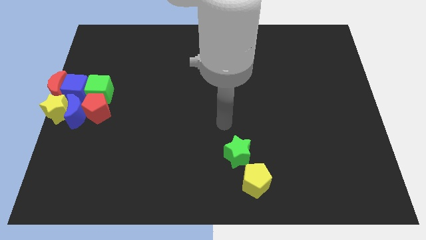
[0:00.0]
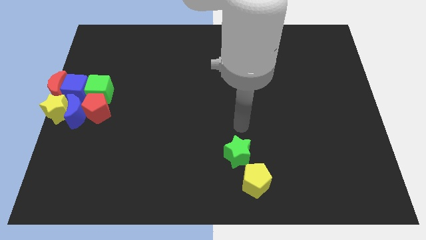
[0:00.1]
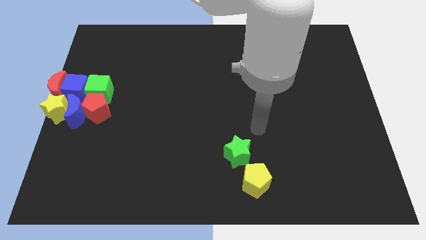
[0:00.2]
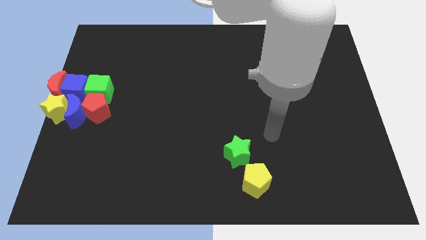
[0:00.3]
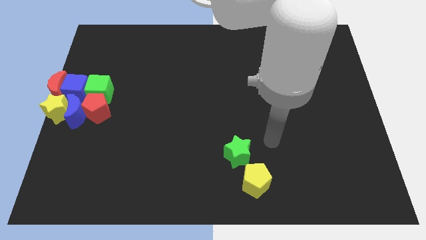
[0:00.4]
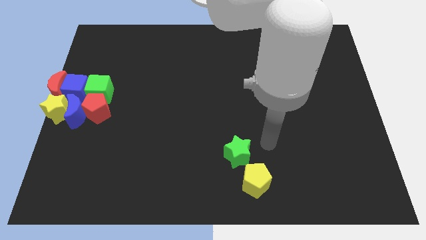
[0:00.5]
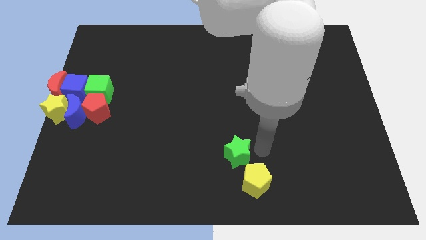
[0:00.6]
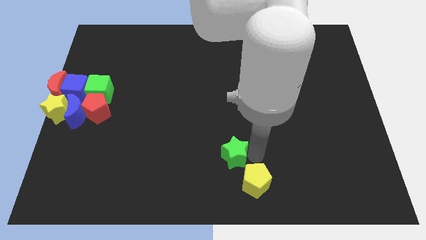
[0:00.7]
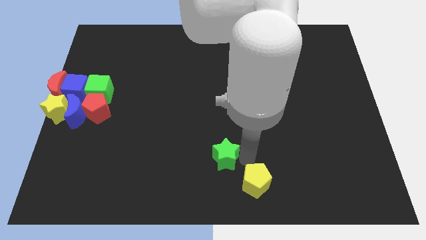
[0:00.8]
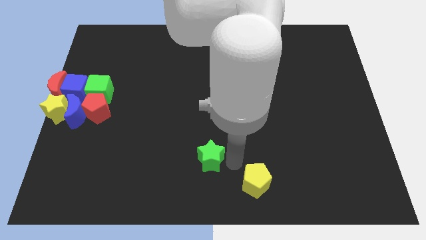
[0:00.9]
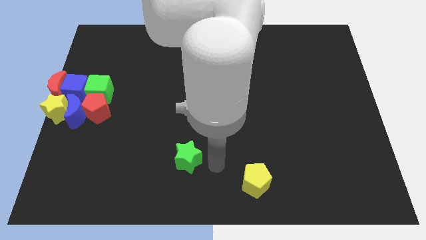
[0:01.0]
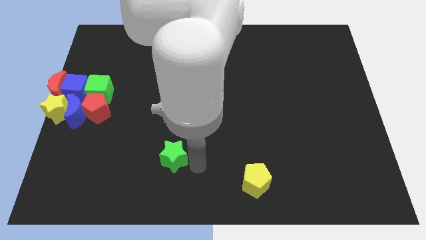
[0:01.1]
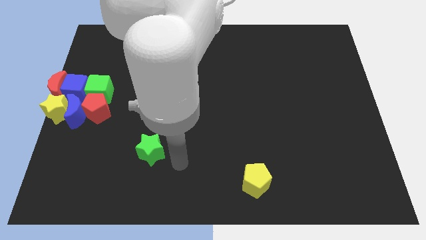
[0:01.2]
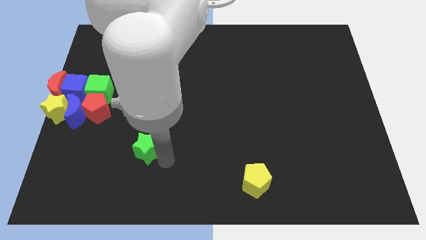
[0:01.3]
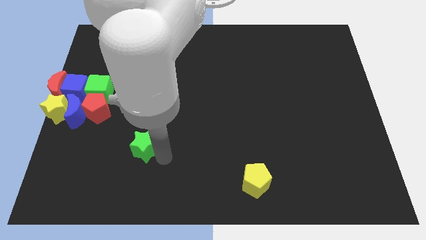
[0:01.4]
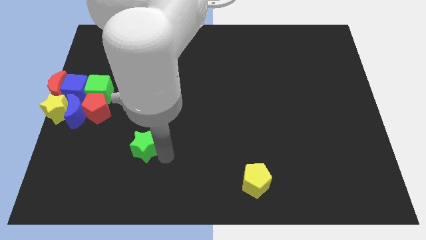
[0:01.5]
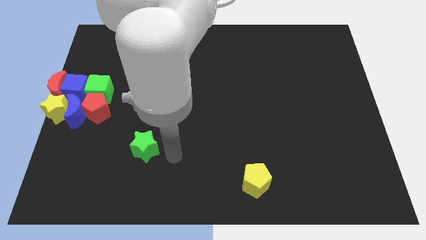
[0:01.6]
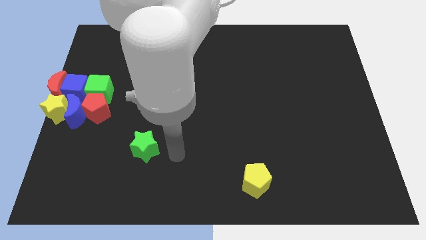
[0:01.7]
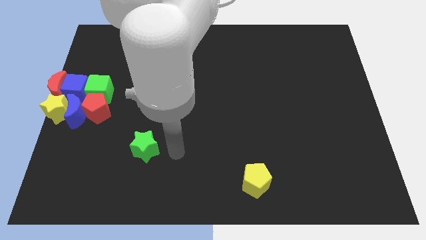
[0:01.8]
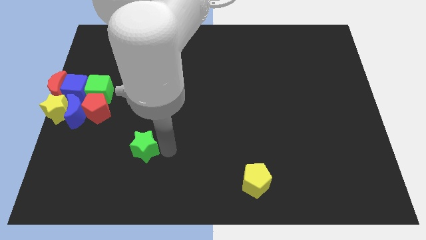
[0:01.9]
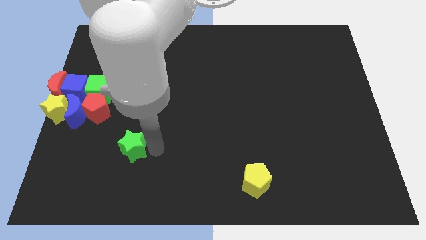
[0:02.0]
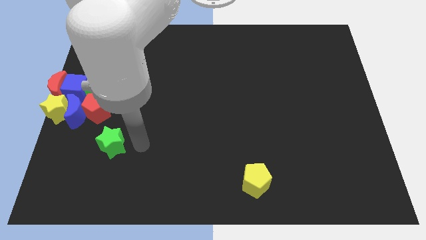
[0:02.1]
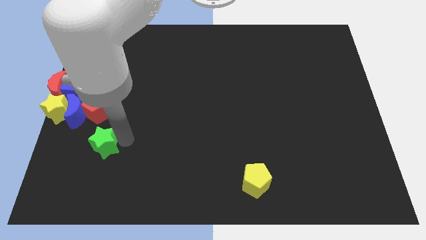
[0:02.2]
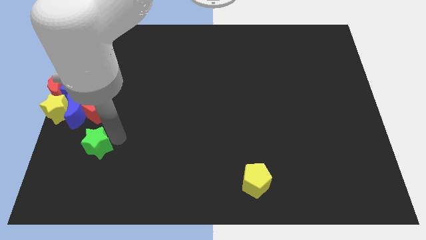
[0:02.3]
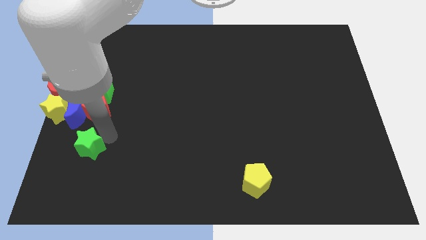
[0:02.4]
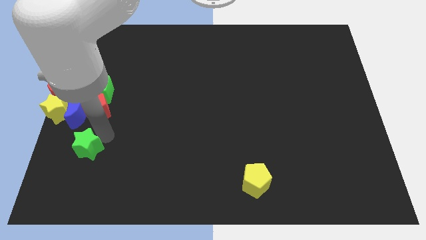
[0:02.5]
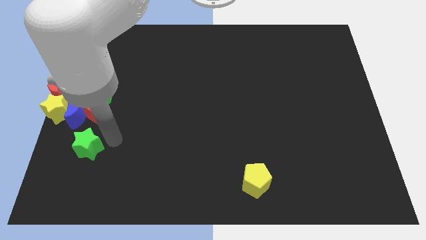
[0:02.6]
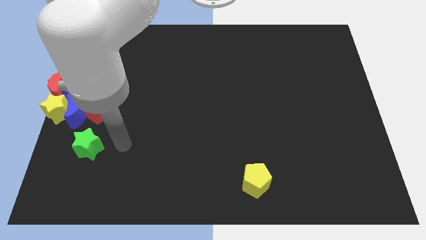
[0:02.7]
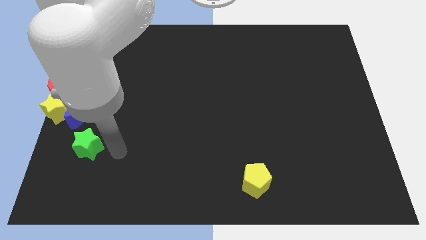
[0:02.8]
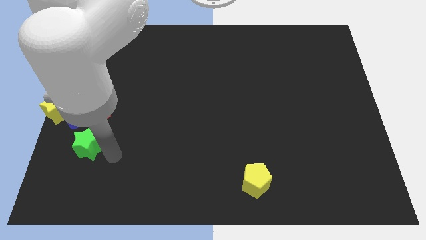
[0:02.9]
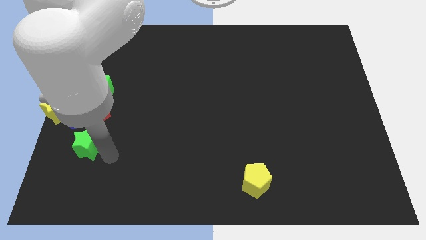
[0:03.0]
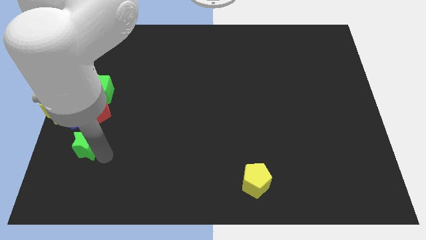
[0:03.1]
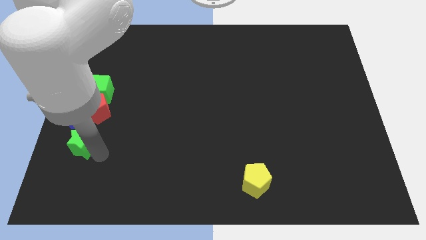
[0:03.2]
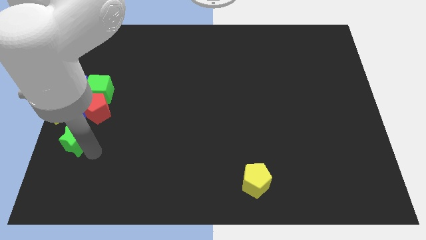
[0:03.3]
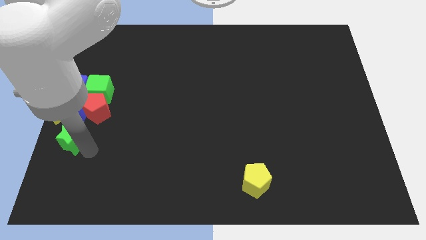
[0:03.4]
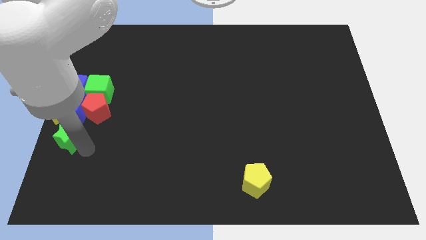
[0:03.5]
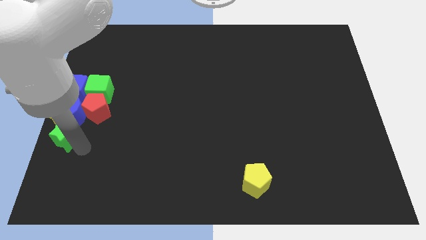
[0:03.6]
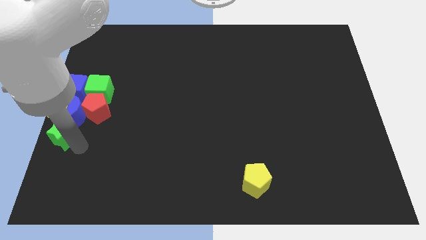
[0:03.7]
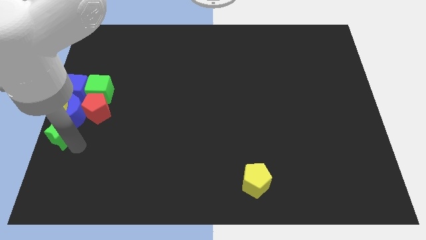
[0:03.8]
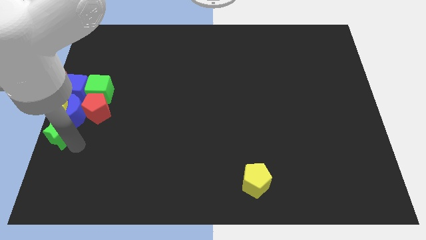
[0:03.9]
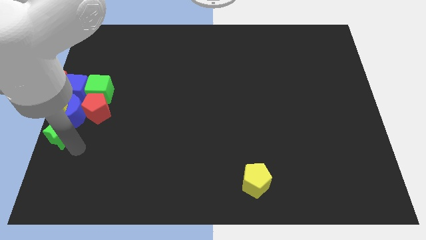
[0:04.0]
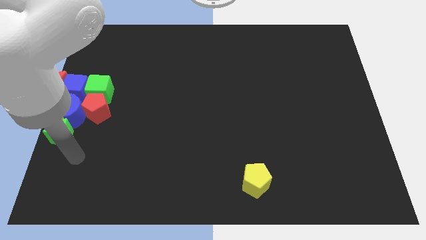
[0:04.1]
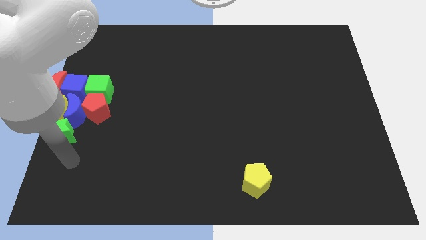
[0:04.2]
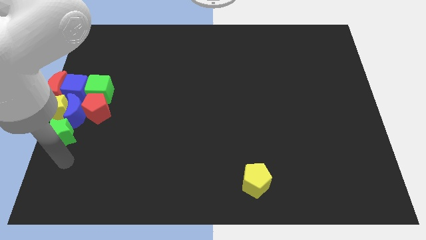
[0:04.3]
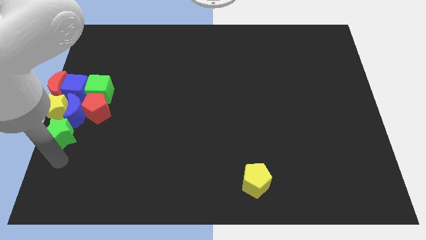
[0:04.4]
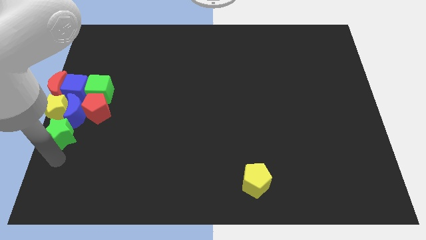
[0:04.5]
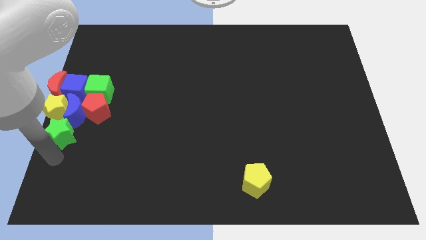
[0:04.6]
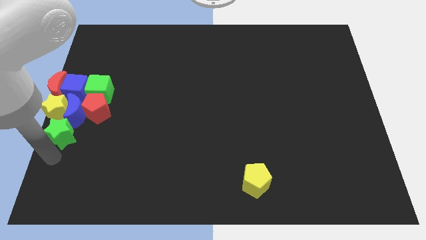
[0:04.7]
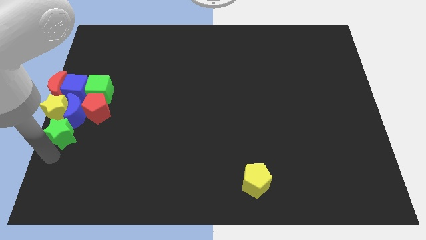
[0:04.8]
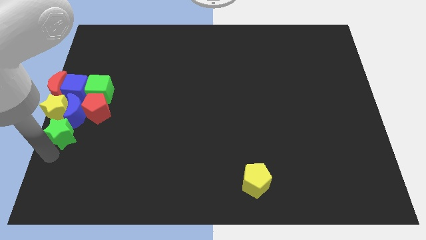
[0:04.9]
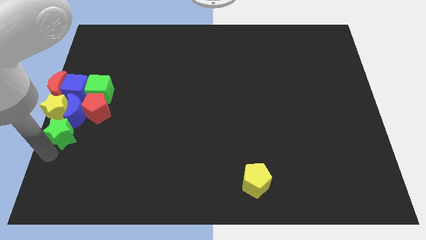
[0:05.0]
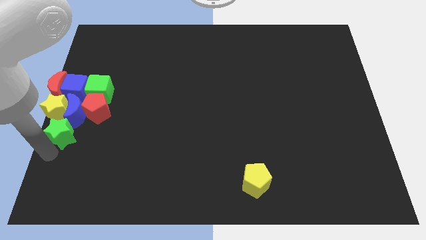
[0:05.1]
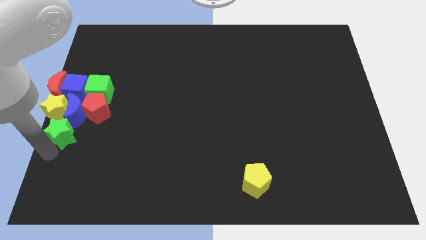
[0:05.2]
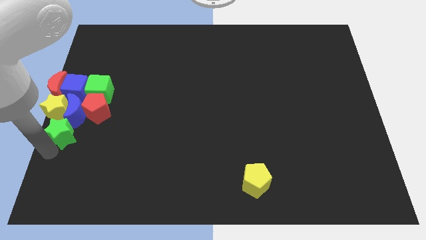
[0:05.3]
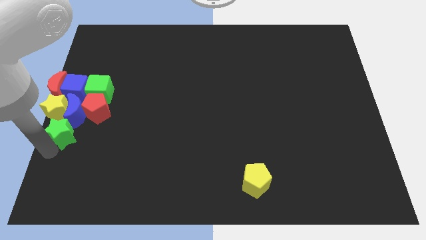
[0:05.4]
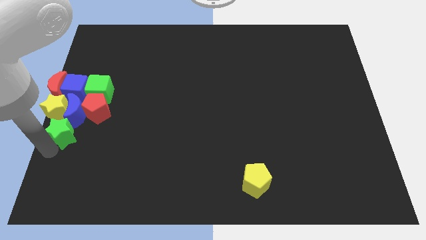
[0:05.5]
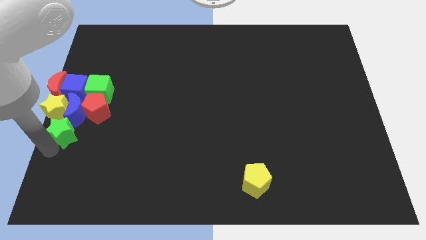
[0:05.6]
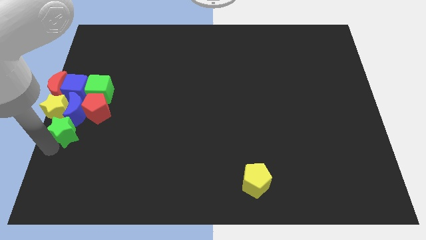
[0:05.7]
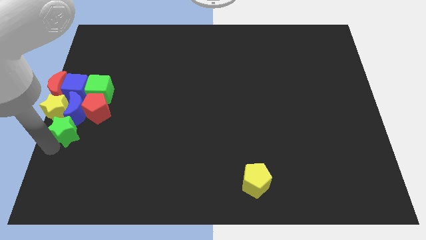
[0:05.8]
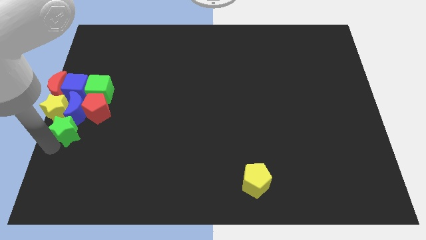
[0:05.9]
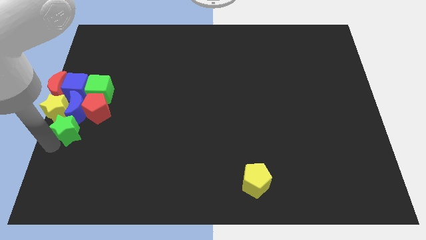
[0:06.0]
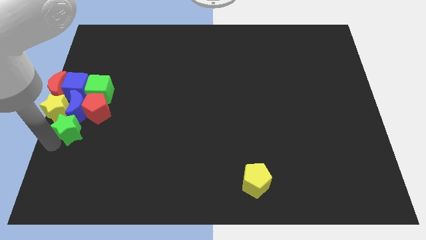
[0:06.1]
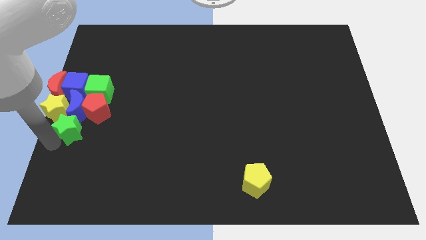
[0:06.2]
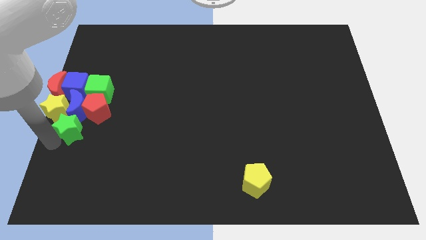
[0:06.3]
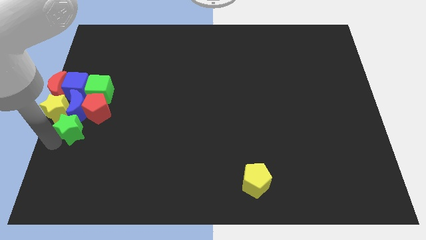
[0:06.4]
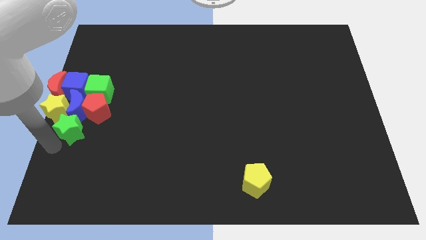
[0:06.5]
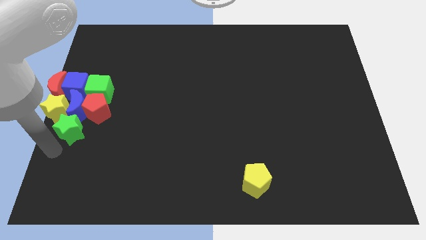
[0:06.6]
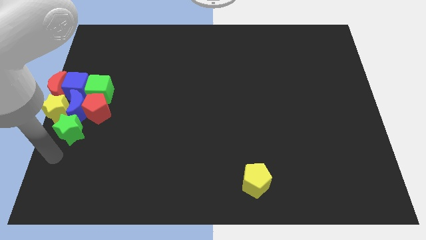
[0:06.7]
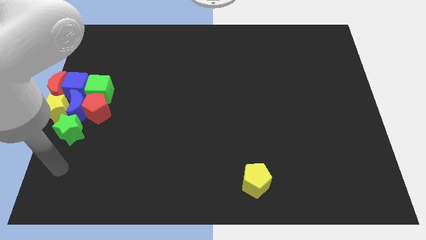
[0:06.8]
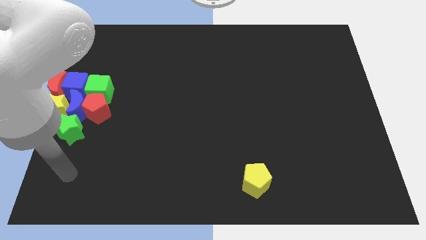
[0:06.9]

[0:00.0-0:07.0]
move the green star to the bottom side of the blue moon

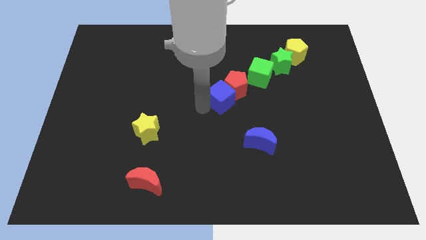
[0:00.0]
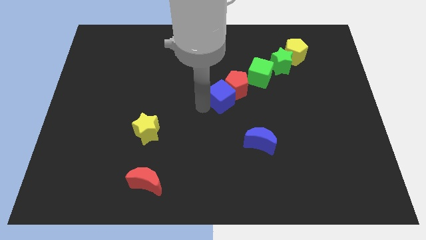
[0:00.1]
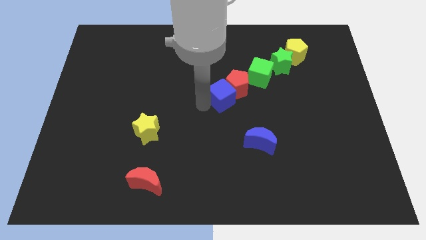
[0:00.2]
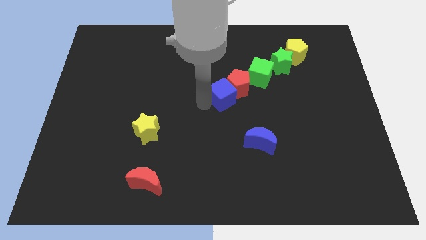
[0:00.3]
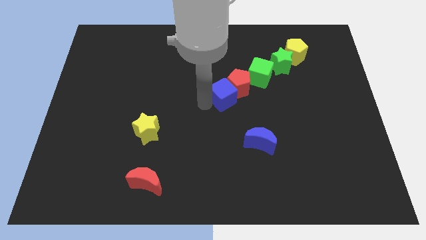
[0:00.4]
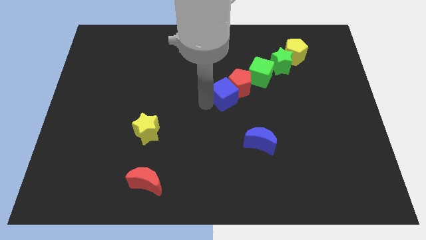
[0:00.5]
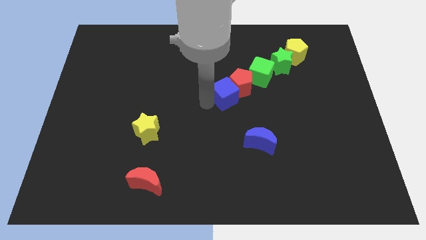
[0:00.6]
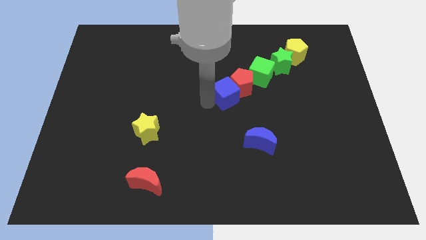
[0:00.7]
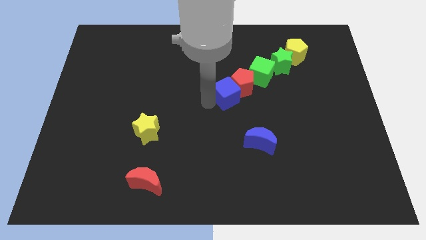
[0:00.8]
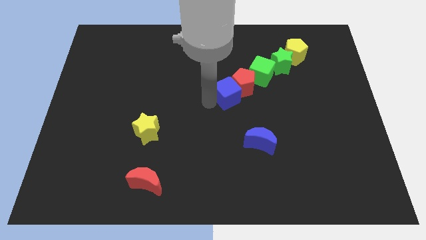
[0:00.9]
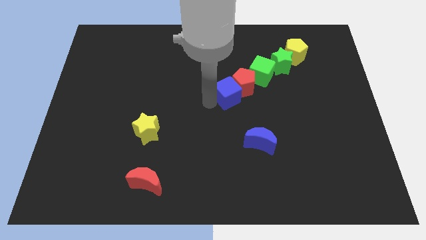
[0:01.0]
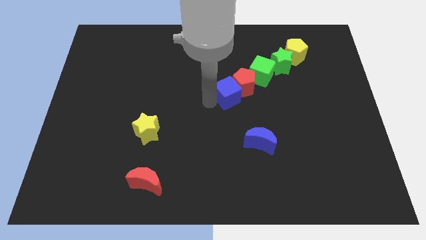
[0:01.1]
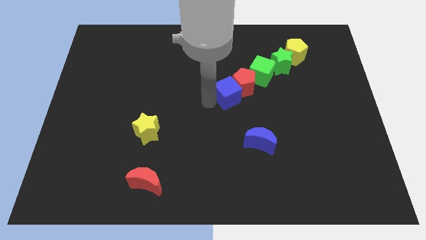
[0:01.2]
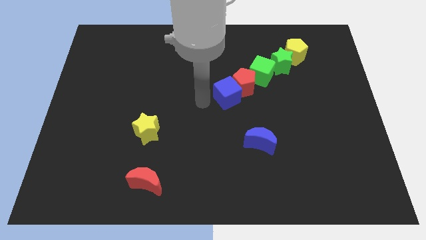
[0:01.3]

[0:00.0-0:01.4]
push the blue cube and red pentagon into green cube

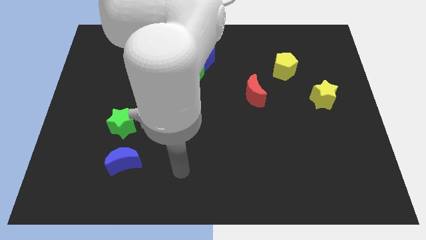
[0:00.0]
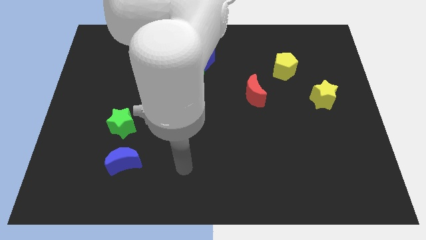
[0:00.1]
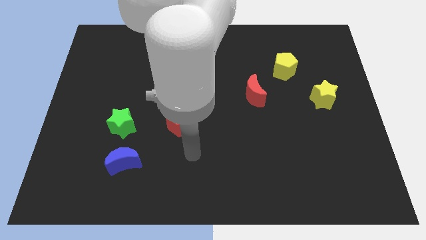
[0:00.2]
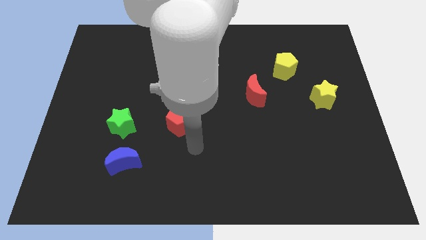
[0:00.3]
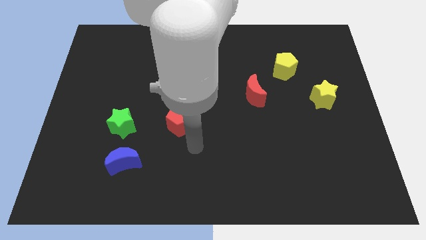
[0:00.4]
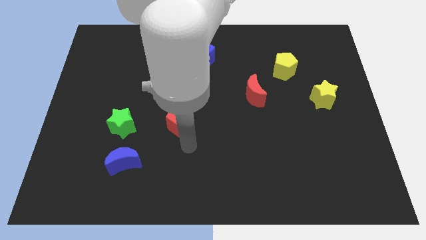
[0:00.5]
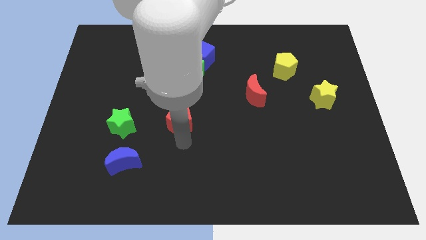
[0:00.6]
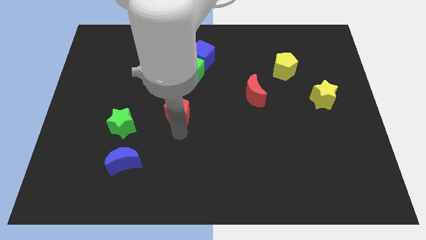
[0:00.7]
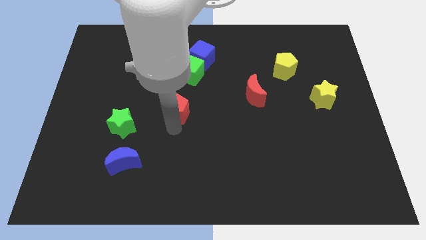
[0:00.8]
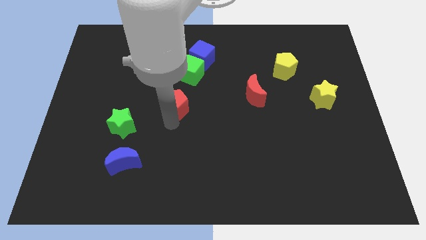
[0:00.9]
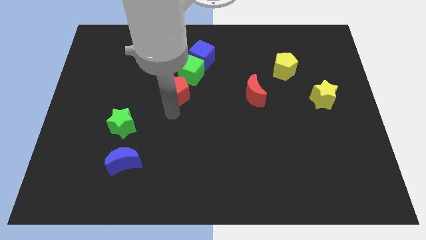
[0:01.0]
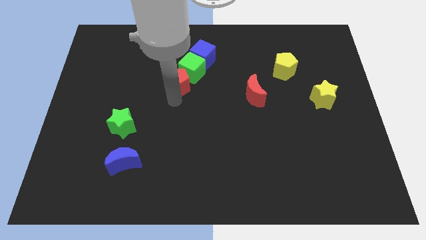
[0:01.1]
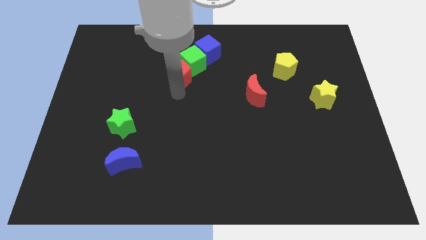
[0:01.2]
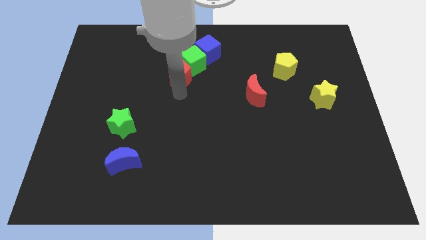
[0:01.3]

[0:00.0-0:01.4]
push the red pentagon into the green cube
